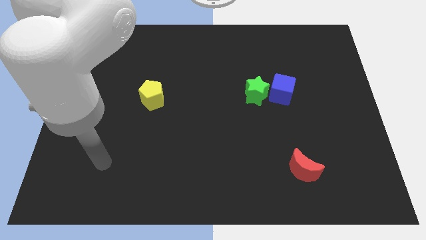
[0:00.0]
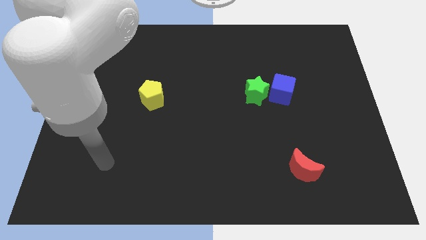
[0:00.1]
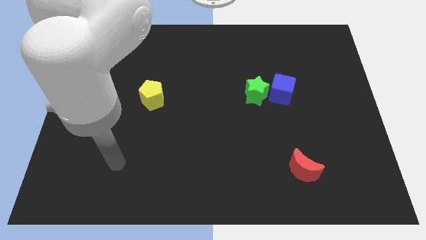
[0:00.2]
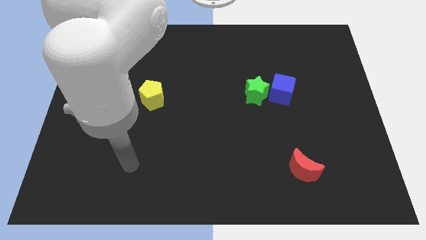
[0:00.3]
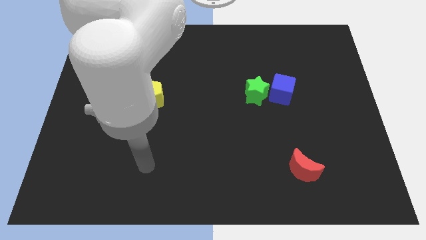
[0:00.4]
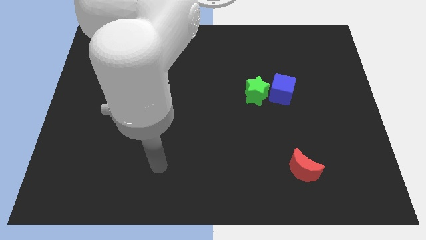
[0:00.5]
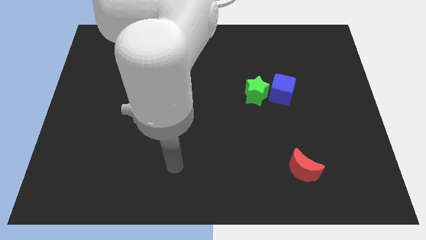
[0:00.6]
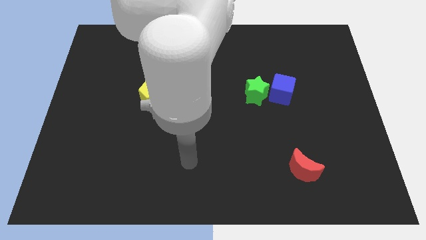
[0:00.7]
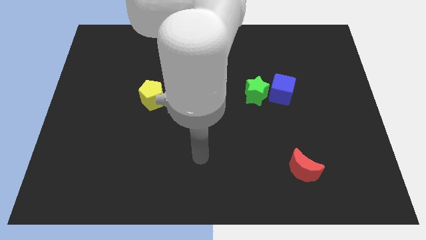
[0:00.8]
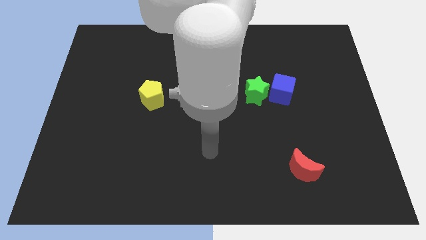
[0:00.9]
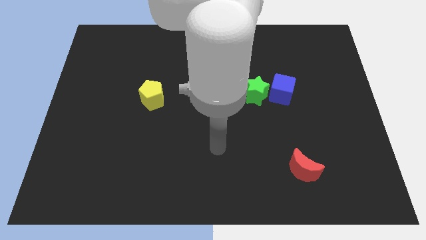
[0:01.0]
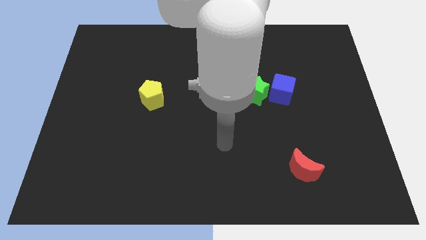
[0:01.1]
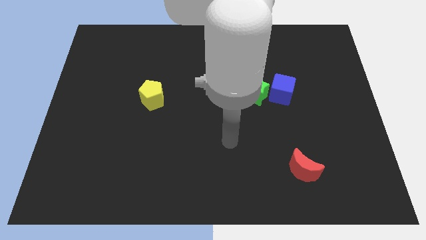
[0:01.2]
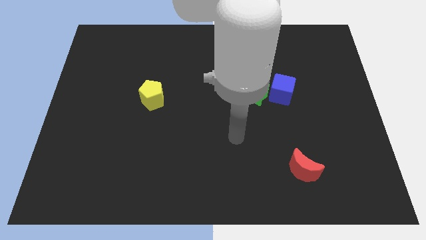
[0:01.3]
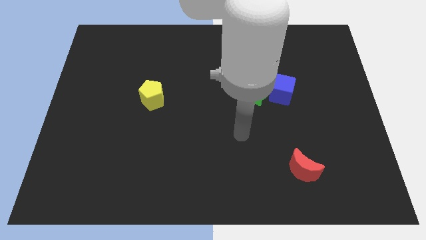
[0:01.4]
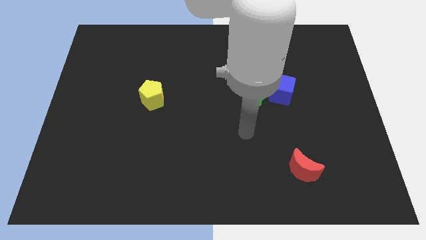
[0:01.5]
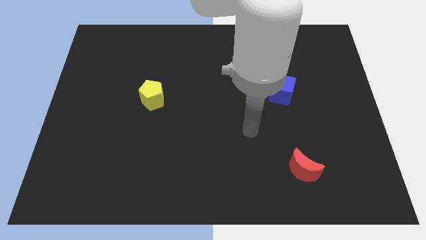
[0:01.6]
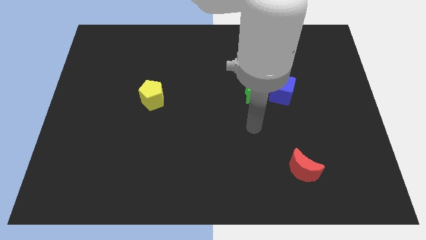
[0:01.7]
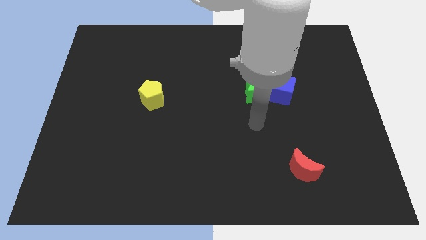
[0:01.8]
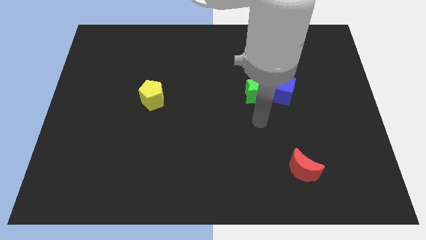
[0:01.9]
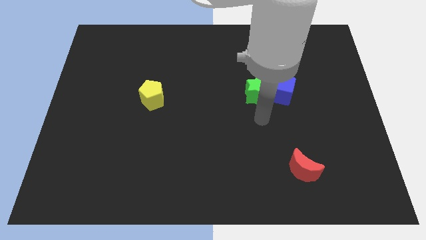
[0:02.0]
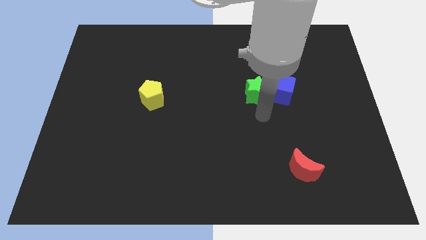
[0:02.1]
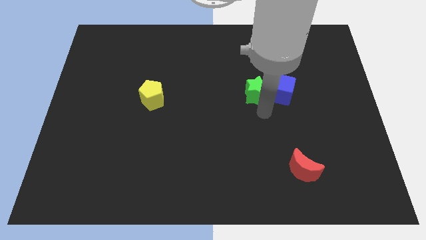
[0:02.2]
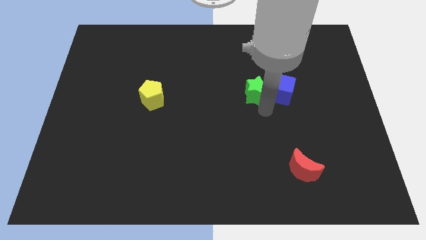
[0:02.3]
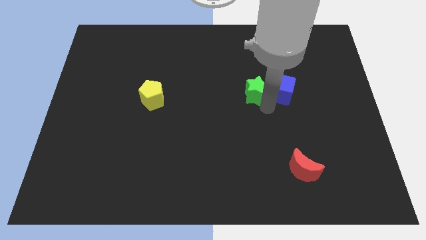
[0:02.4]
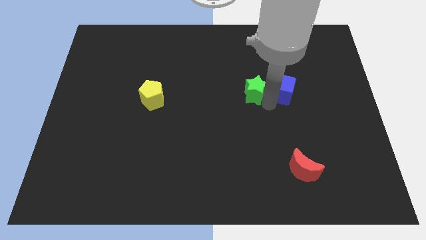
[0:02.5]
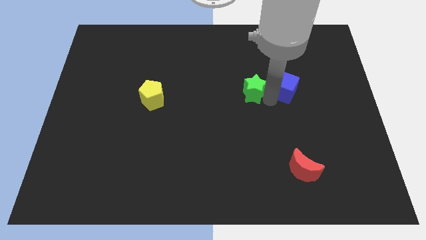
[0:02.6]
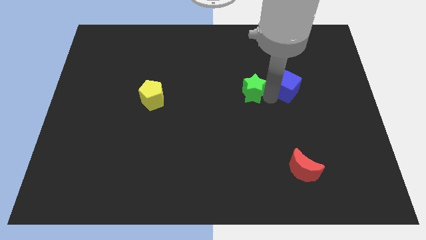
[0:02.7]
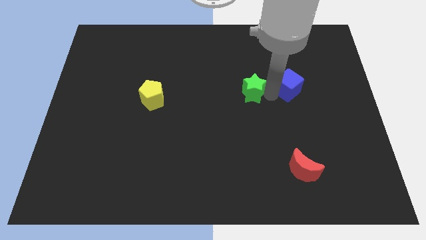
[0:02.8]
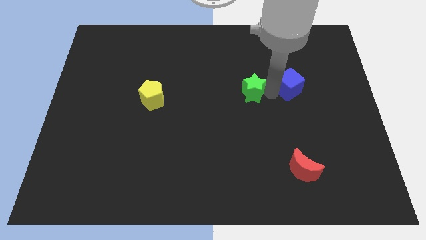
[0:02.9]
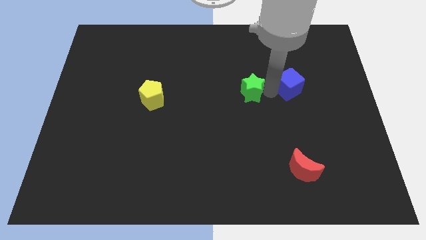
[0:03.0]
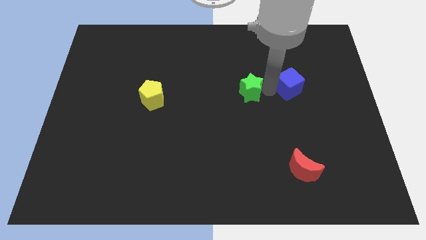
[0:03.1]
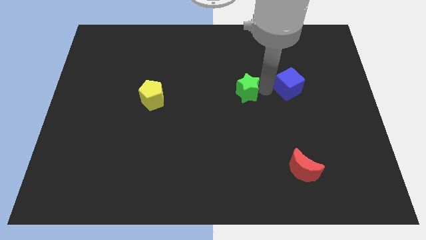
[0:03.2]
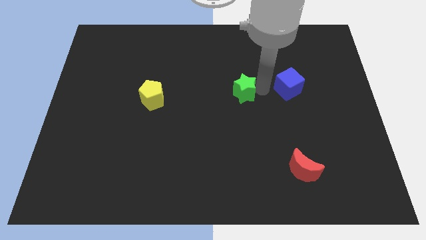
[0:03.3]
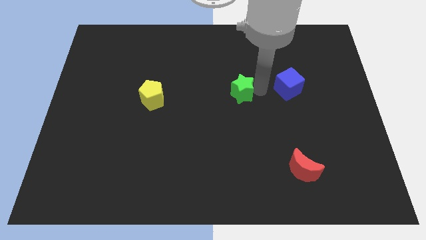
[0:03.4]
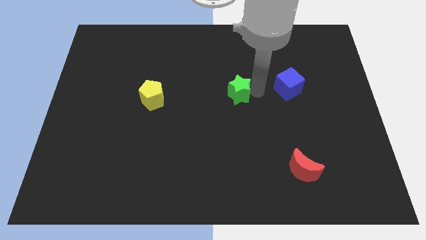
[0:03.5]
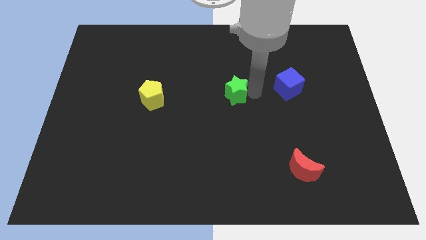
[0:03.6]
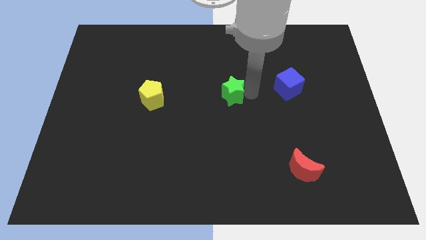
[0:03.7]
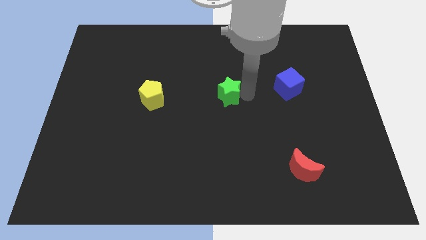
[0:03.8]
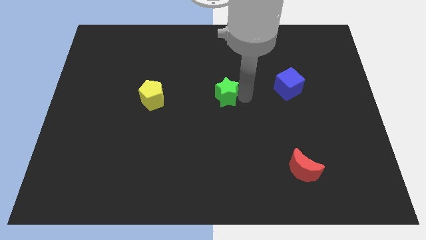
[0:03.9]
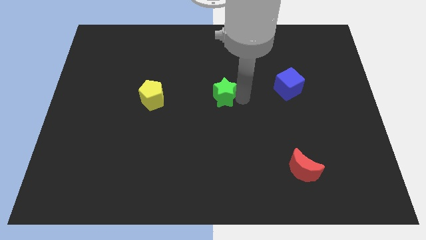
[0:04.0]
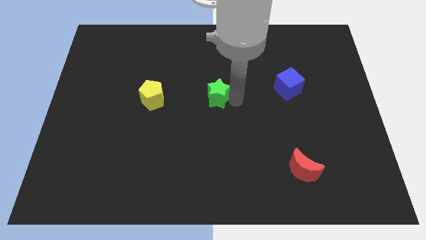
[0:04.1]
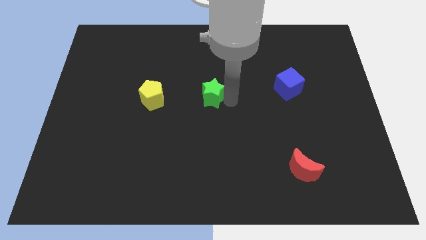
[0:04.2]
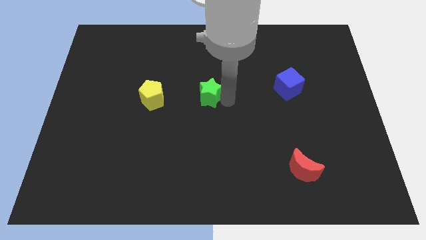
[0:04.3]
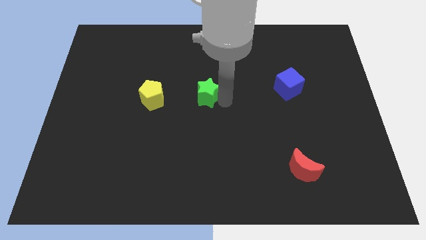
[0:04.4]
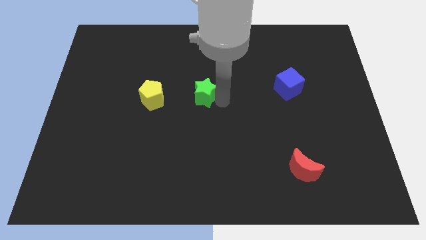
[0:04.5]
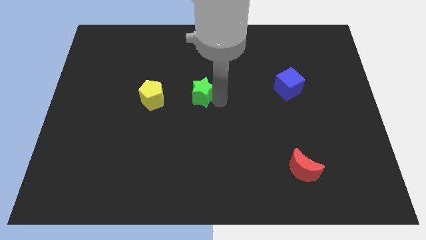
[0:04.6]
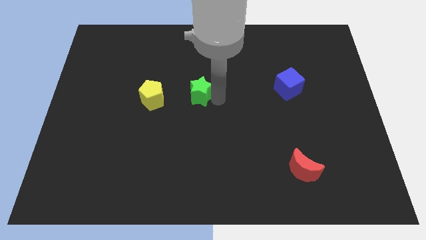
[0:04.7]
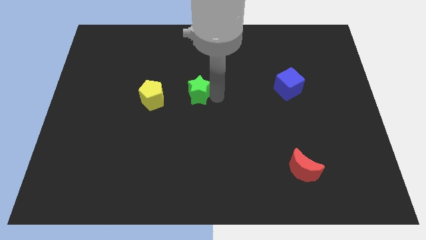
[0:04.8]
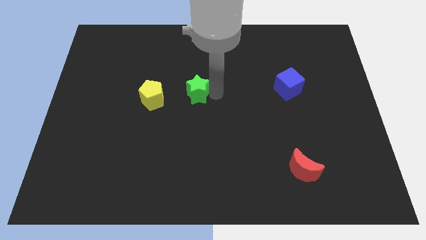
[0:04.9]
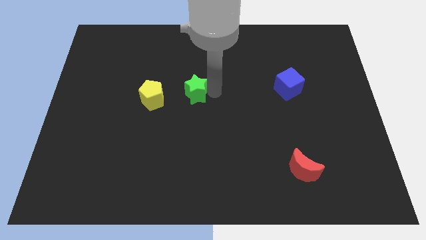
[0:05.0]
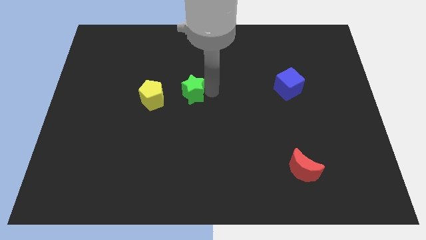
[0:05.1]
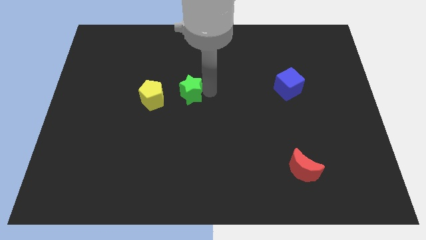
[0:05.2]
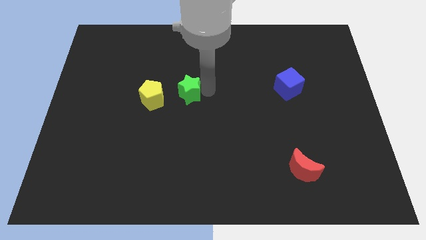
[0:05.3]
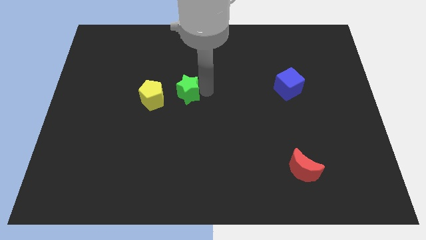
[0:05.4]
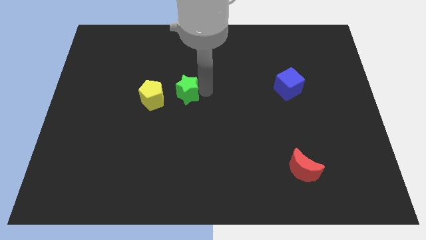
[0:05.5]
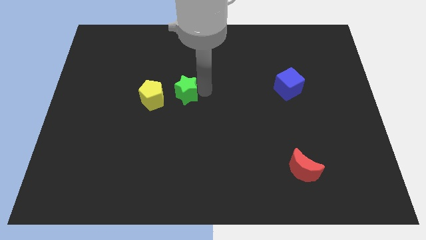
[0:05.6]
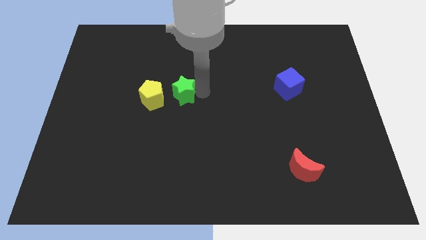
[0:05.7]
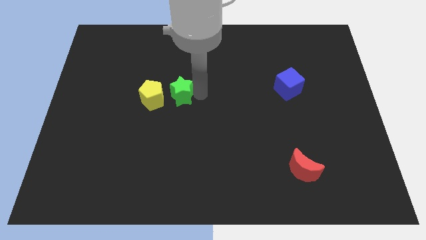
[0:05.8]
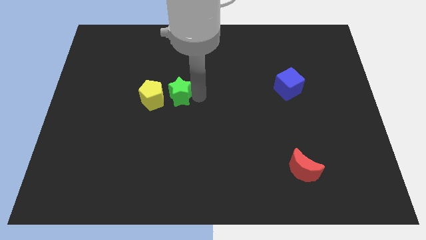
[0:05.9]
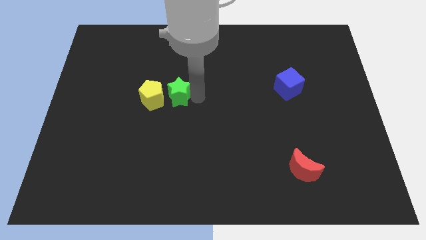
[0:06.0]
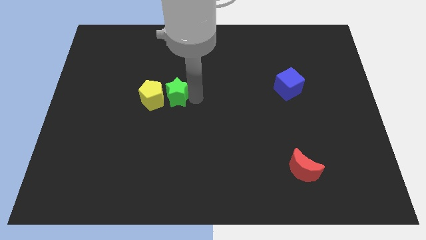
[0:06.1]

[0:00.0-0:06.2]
slide the green block to the pentagon

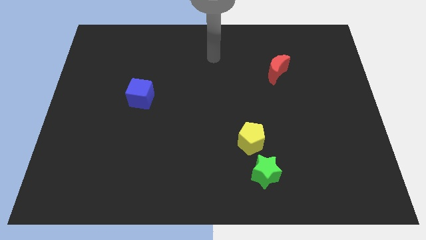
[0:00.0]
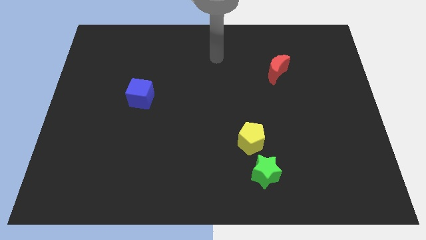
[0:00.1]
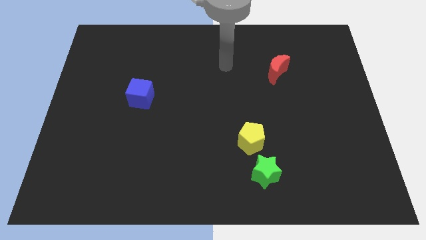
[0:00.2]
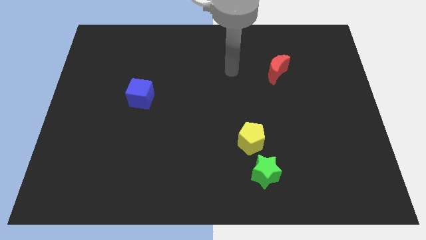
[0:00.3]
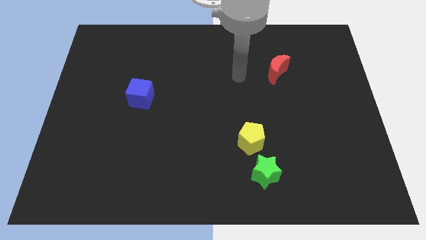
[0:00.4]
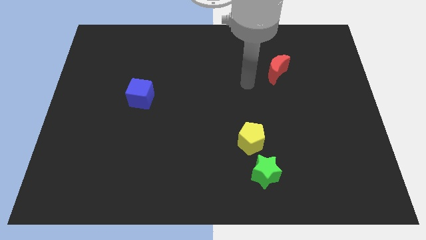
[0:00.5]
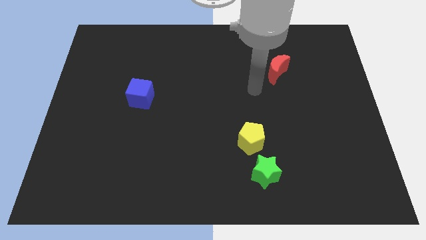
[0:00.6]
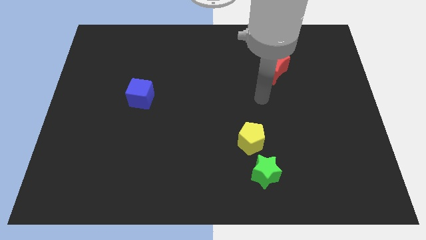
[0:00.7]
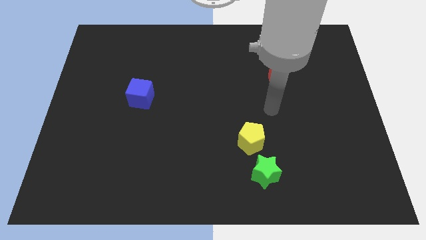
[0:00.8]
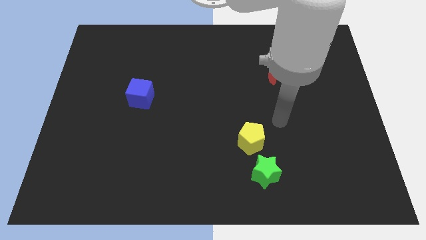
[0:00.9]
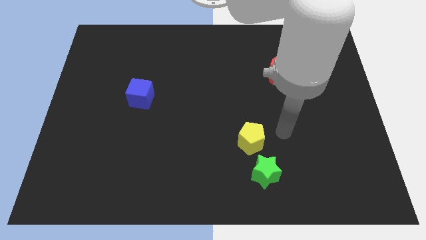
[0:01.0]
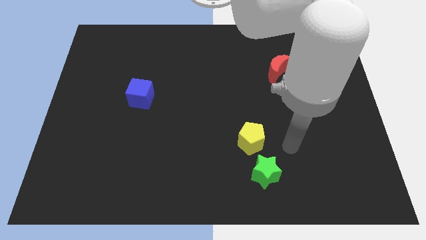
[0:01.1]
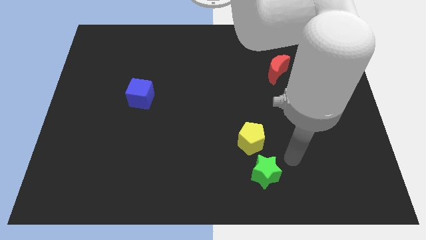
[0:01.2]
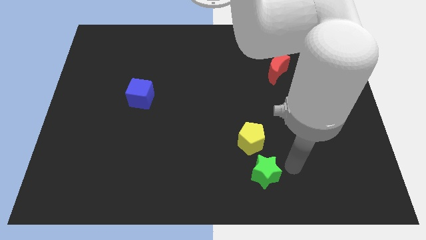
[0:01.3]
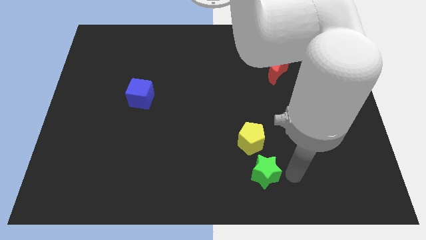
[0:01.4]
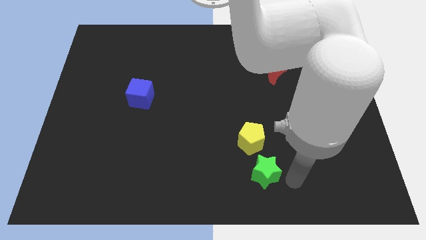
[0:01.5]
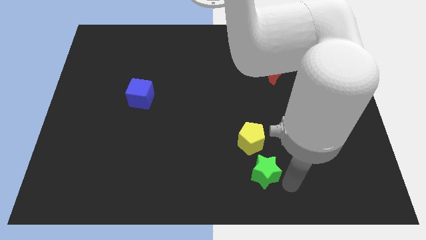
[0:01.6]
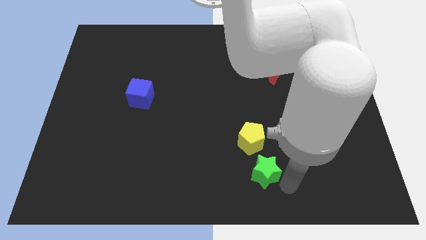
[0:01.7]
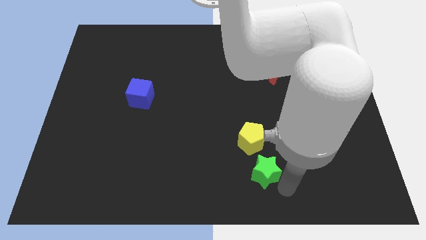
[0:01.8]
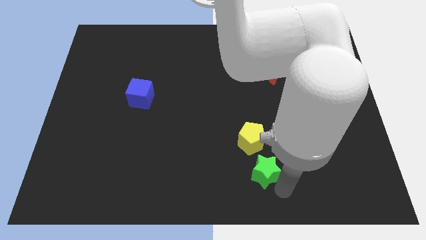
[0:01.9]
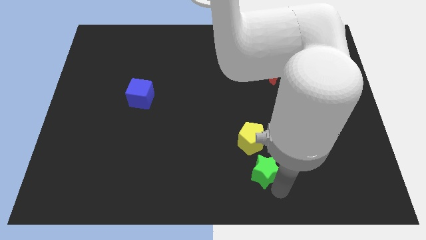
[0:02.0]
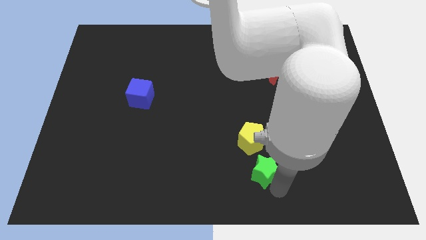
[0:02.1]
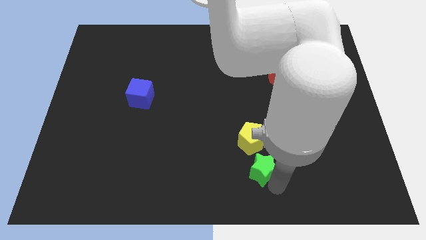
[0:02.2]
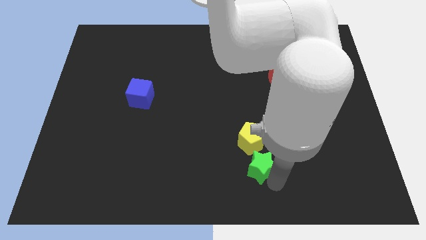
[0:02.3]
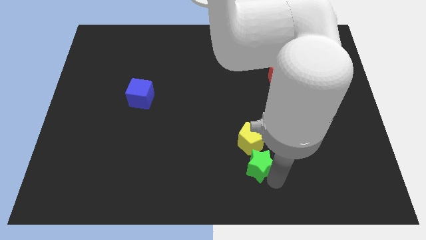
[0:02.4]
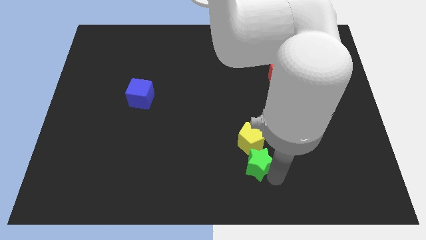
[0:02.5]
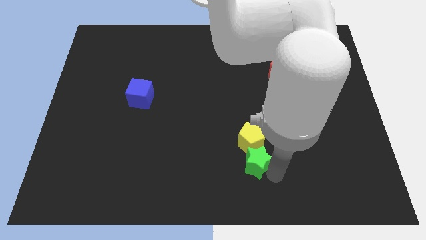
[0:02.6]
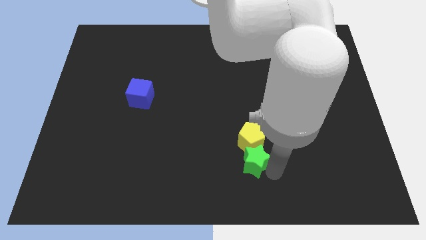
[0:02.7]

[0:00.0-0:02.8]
put the green star towards the yellow block
